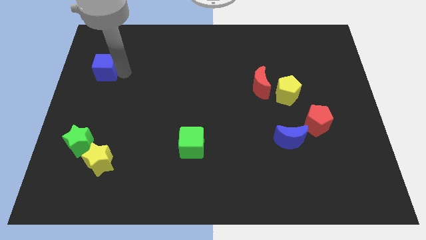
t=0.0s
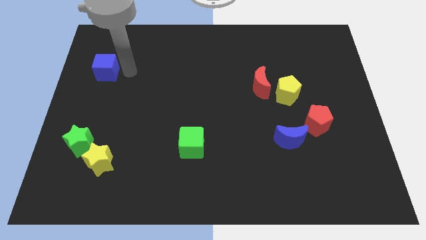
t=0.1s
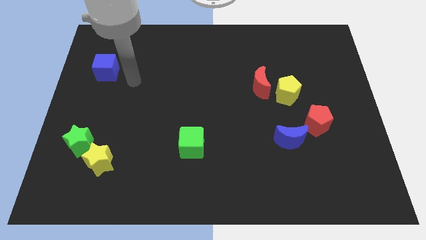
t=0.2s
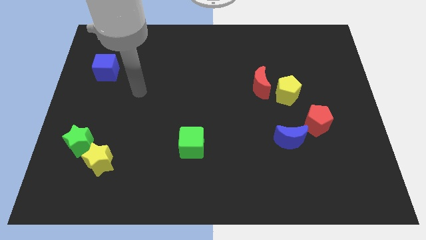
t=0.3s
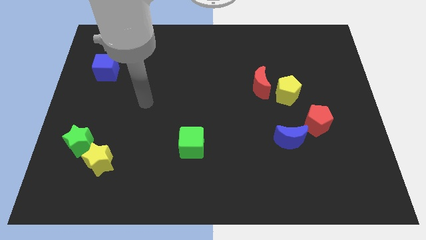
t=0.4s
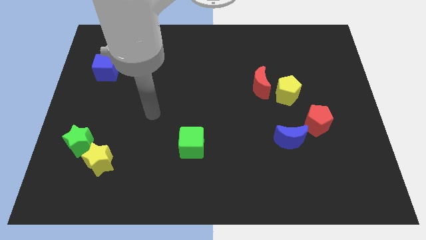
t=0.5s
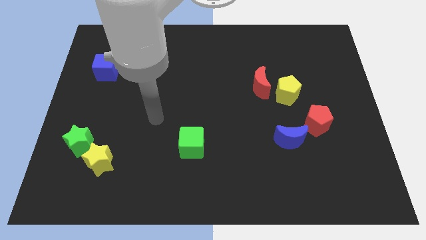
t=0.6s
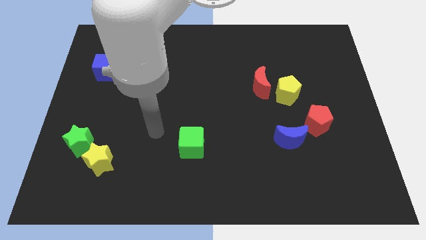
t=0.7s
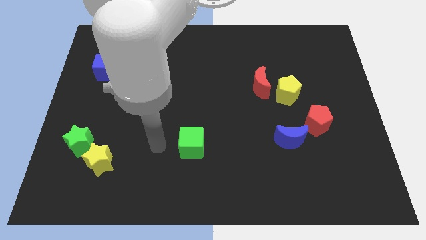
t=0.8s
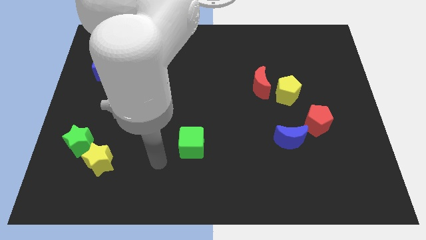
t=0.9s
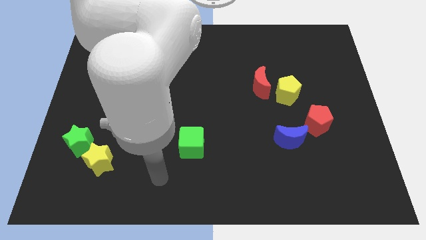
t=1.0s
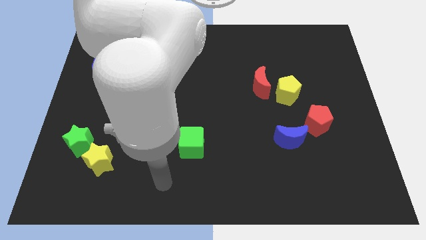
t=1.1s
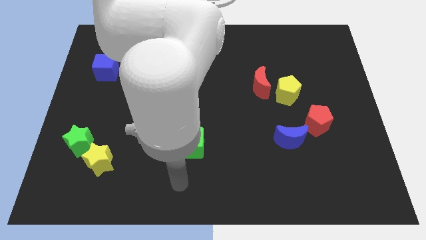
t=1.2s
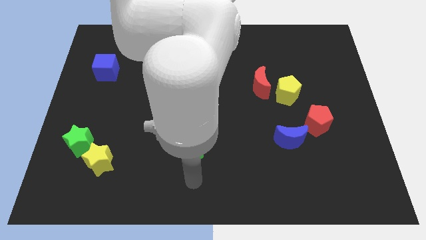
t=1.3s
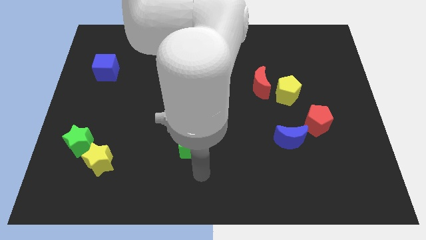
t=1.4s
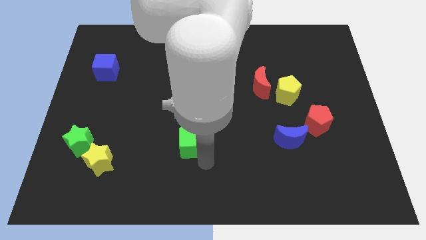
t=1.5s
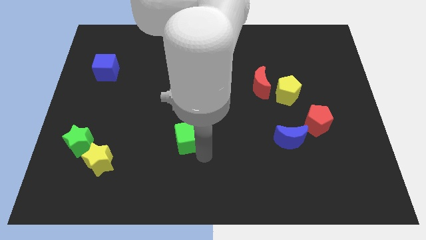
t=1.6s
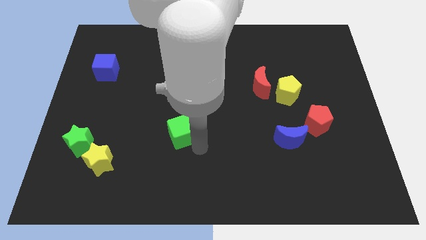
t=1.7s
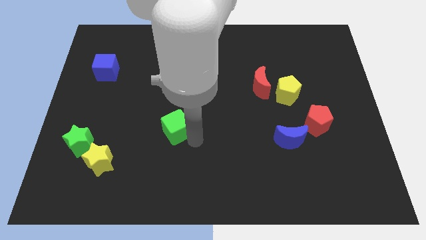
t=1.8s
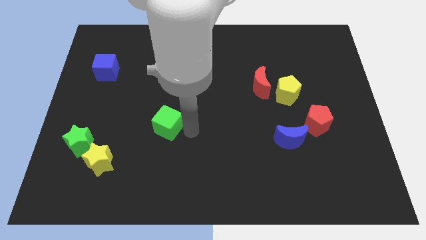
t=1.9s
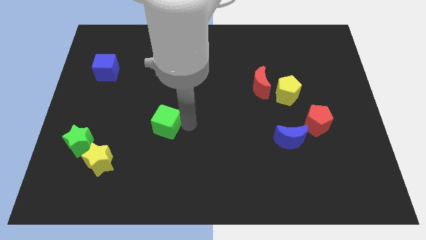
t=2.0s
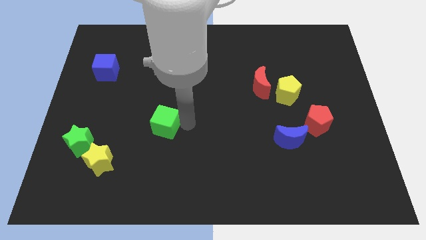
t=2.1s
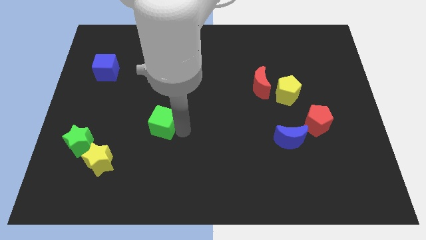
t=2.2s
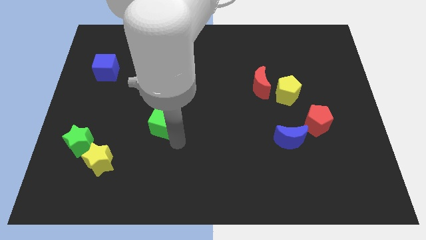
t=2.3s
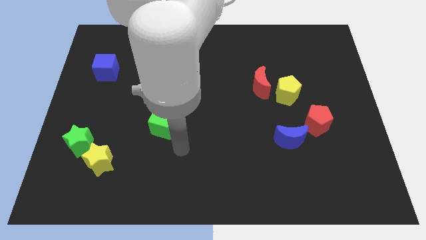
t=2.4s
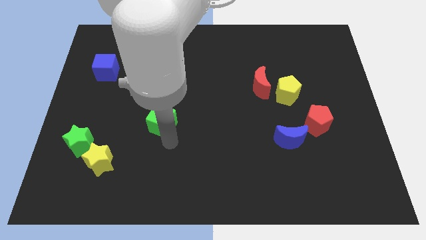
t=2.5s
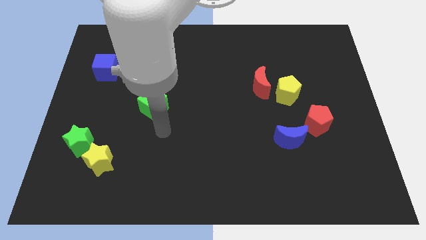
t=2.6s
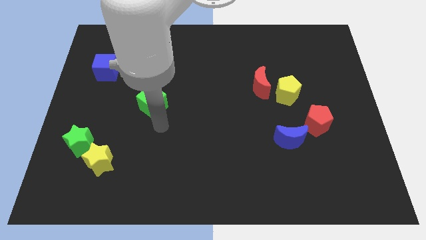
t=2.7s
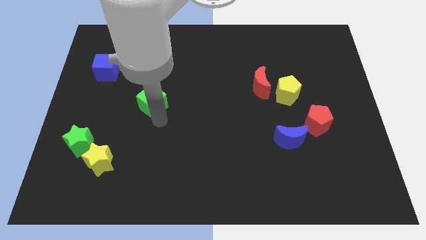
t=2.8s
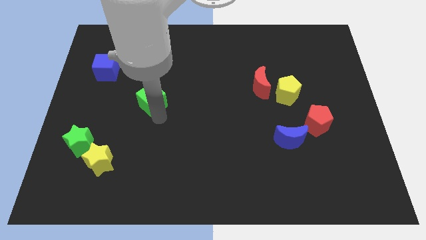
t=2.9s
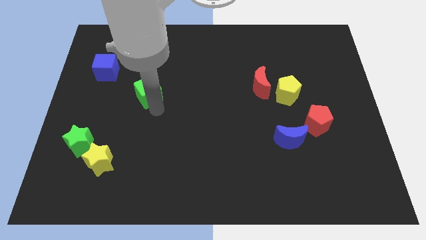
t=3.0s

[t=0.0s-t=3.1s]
place the green cube in between the green star and red moon

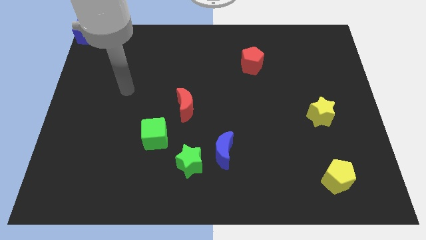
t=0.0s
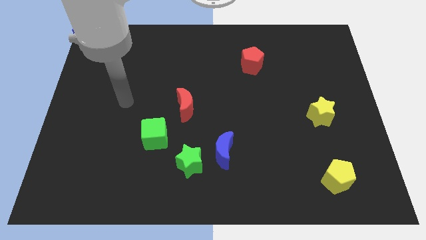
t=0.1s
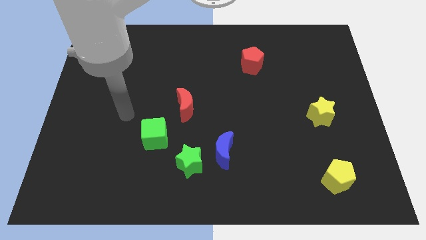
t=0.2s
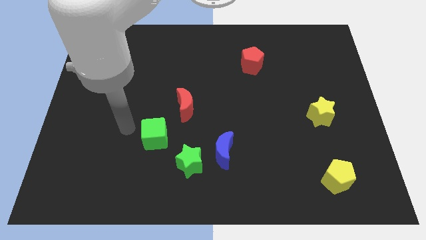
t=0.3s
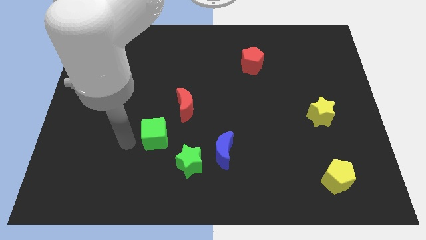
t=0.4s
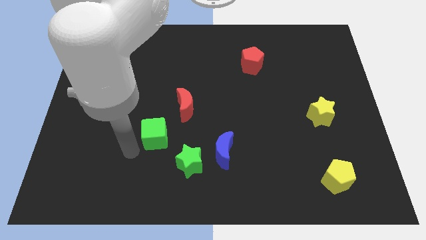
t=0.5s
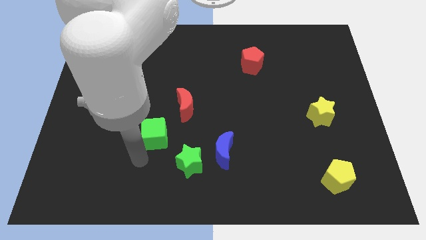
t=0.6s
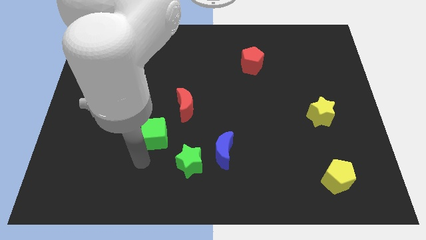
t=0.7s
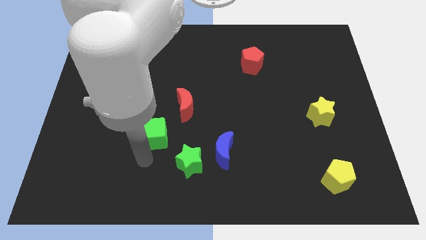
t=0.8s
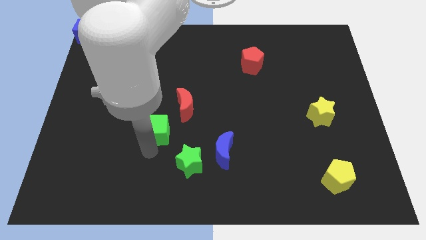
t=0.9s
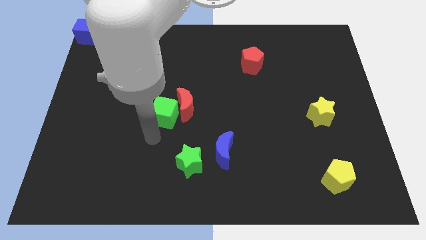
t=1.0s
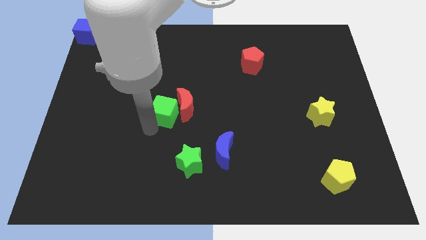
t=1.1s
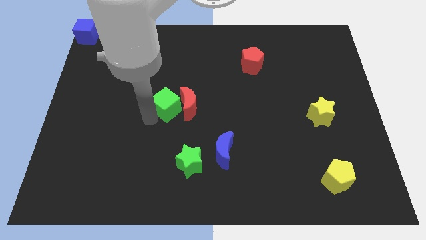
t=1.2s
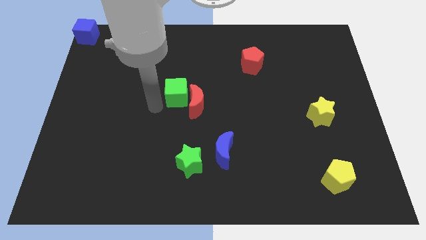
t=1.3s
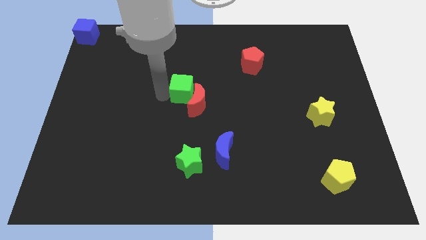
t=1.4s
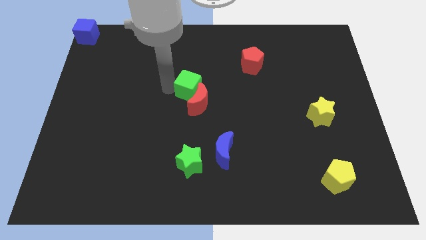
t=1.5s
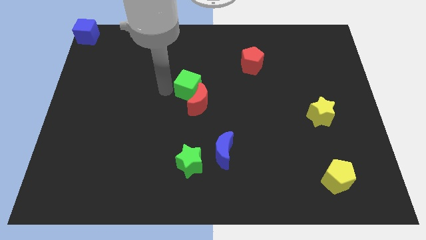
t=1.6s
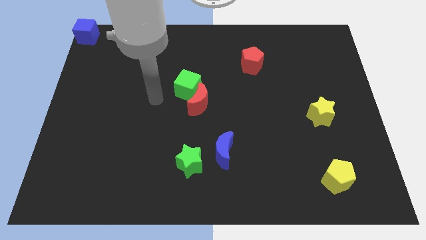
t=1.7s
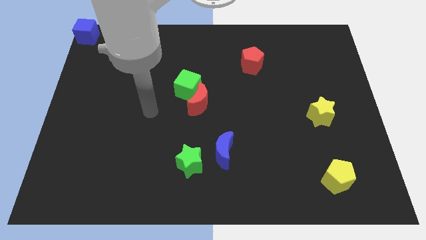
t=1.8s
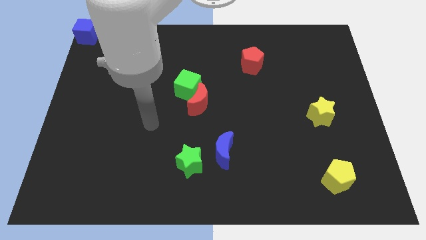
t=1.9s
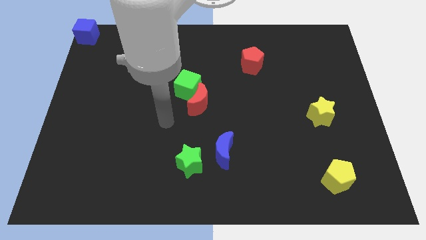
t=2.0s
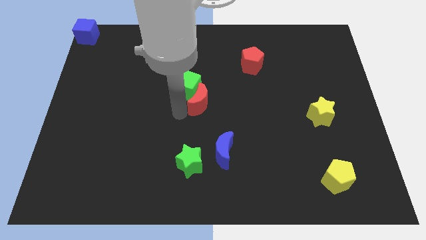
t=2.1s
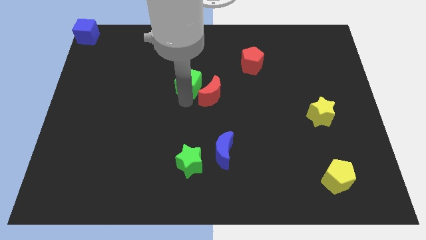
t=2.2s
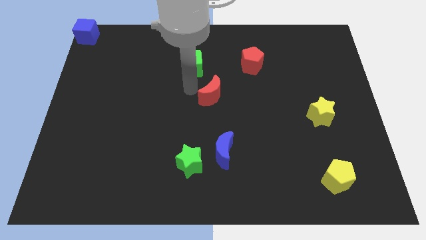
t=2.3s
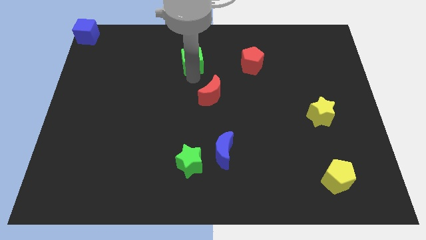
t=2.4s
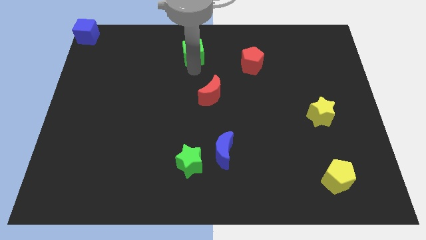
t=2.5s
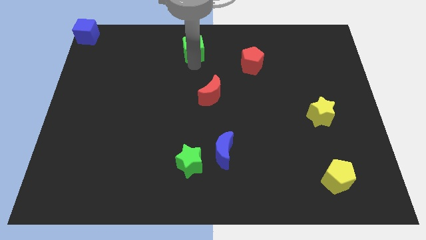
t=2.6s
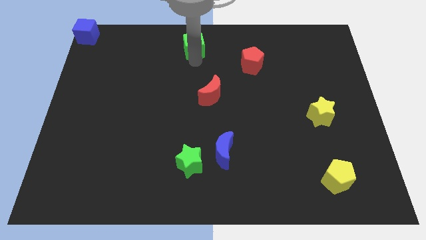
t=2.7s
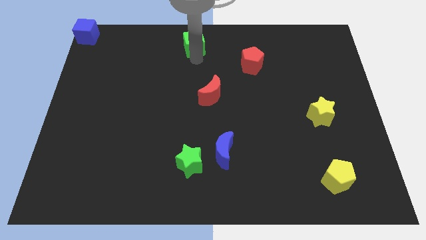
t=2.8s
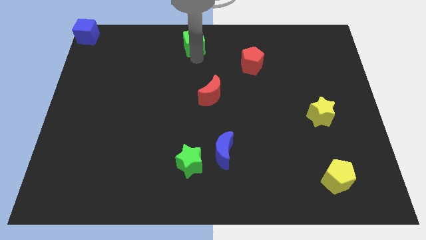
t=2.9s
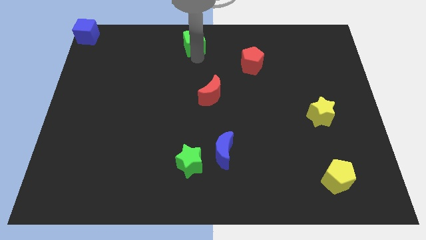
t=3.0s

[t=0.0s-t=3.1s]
separate green cube from red moon

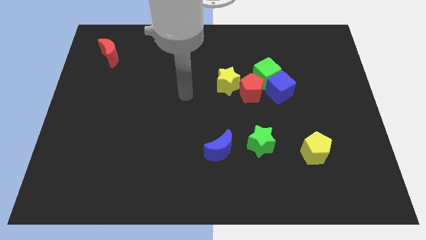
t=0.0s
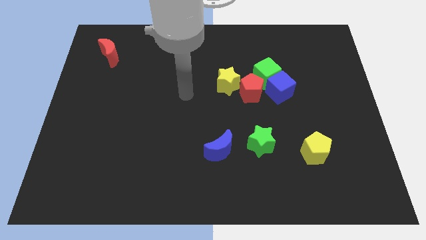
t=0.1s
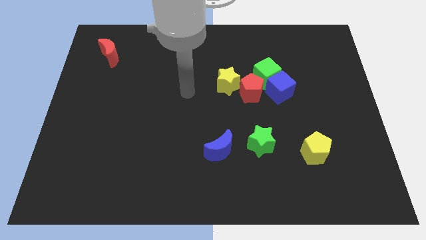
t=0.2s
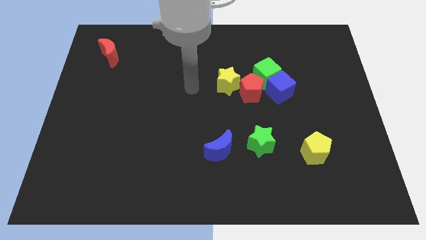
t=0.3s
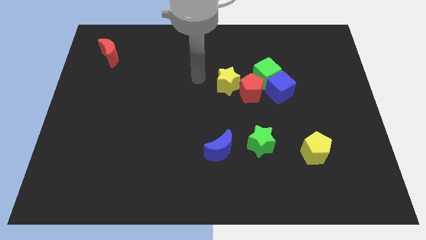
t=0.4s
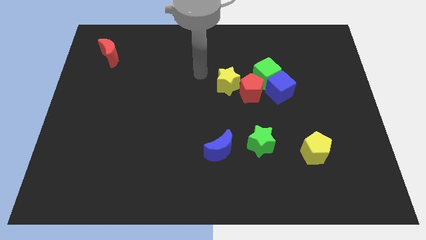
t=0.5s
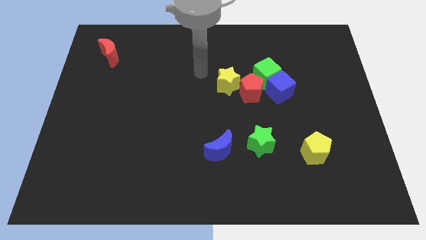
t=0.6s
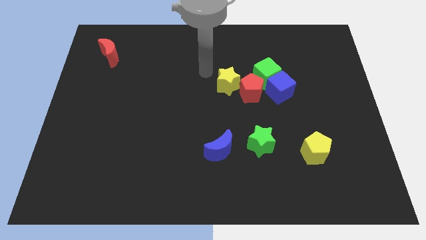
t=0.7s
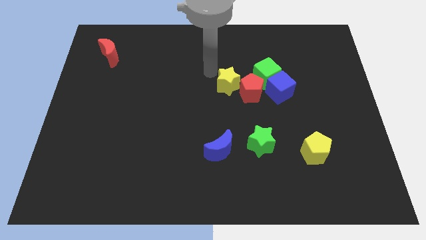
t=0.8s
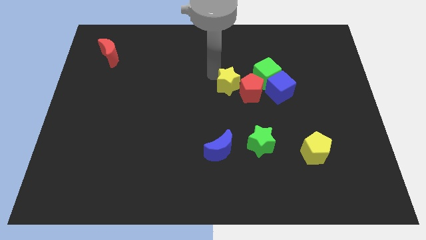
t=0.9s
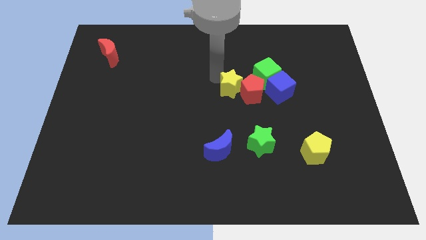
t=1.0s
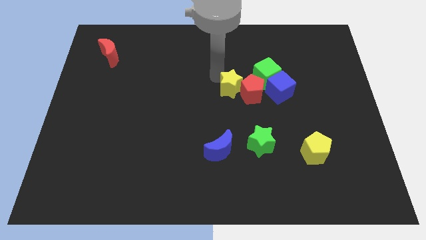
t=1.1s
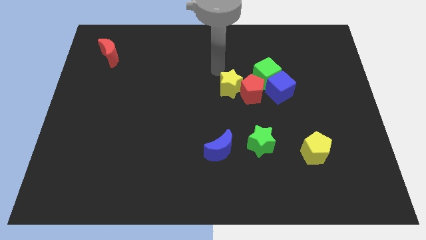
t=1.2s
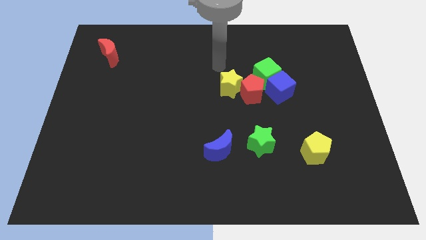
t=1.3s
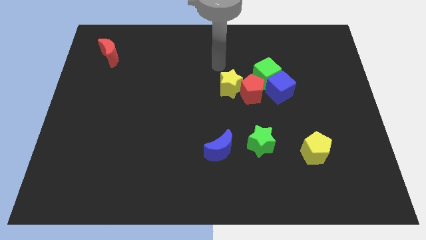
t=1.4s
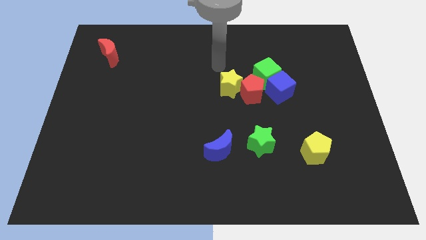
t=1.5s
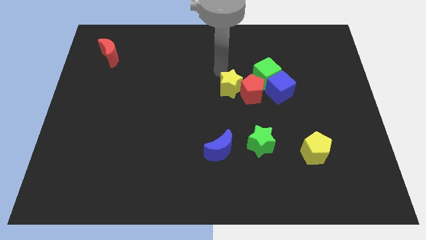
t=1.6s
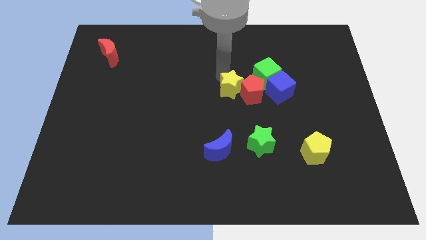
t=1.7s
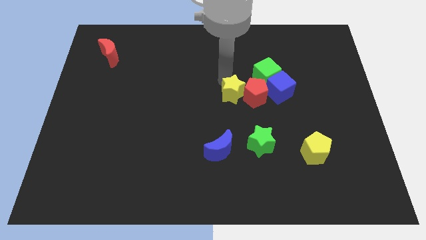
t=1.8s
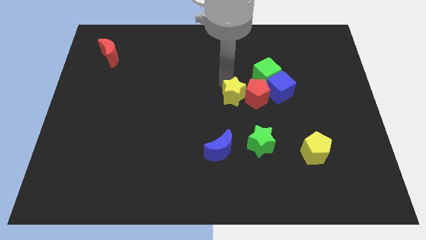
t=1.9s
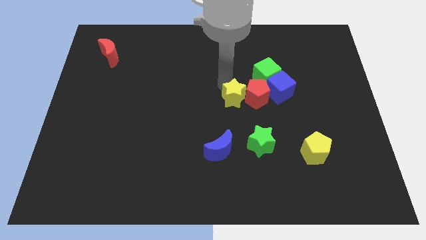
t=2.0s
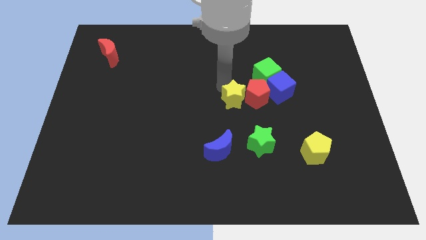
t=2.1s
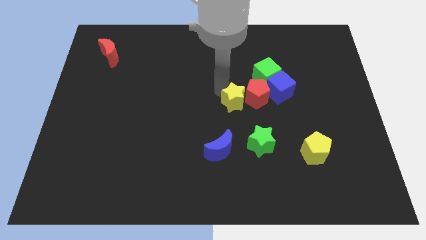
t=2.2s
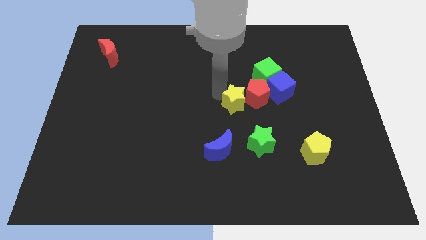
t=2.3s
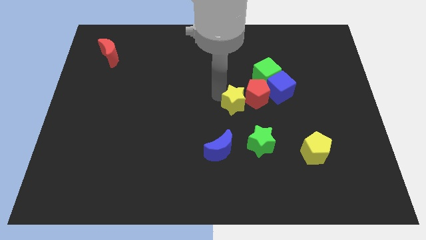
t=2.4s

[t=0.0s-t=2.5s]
push the yellow star close to the red pentagon

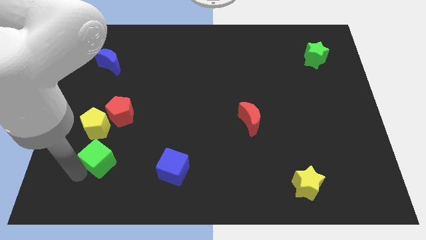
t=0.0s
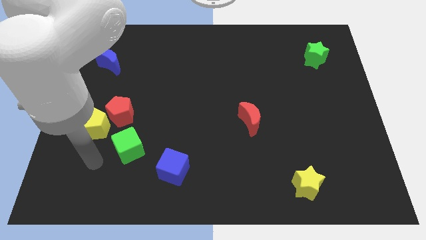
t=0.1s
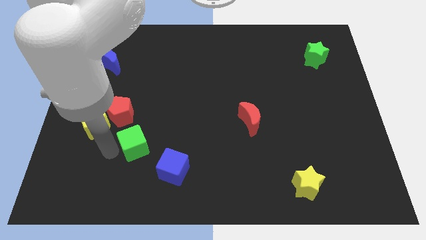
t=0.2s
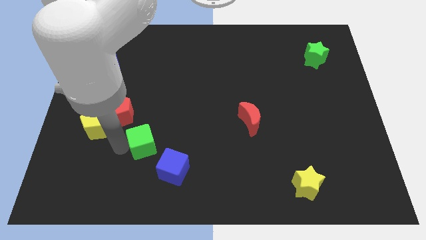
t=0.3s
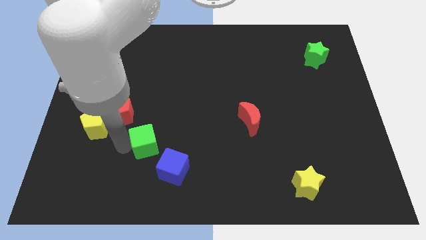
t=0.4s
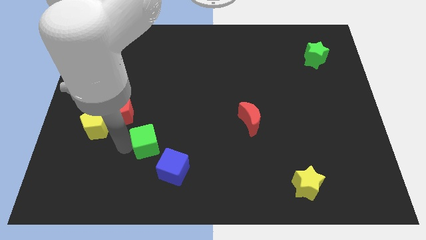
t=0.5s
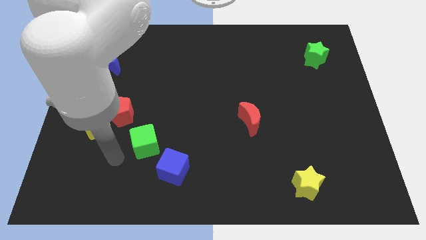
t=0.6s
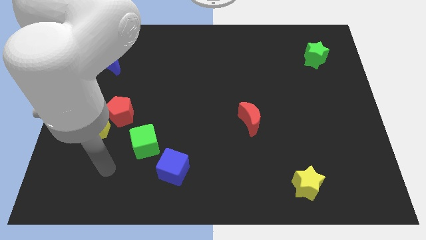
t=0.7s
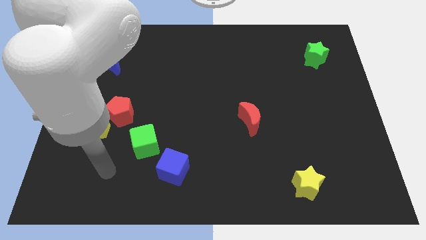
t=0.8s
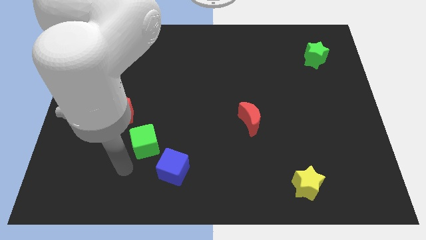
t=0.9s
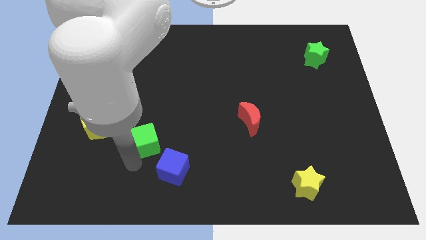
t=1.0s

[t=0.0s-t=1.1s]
place green cube to the top left of blue cube
